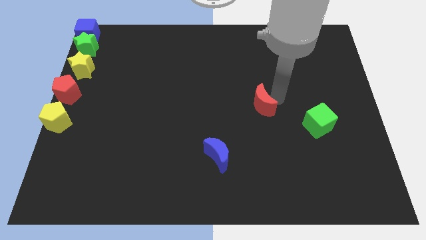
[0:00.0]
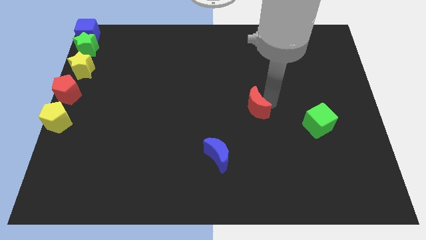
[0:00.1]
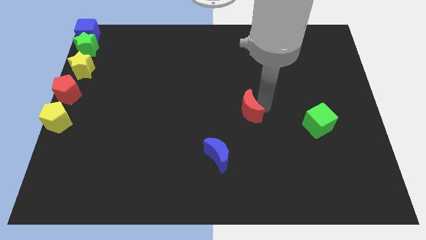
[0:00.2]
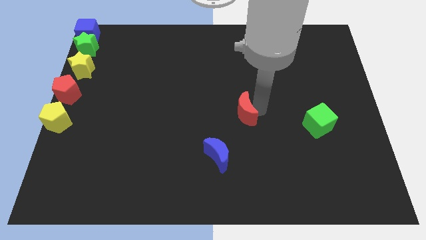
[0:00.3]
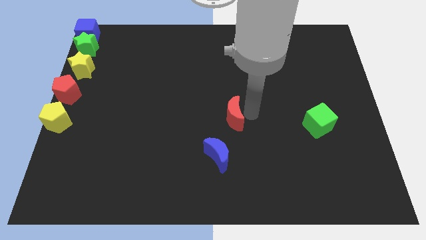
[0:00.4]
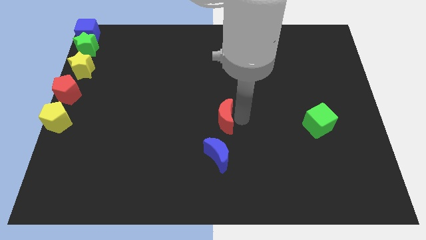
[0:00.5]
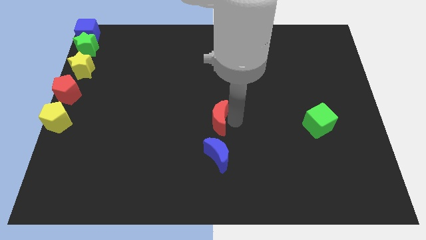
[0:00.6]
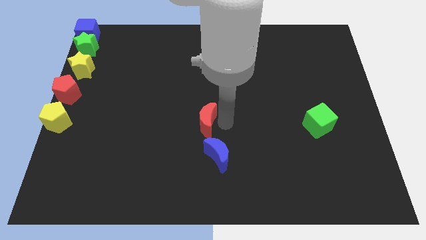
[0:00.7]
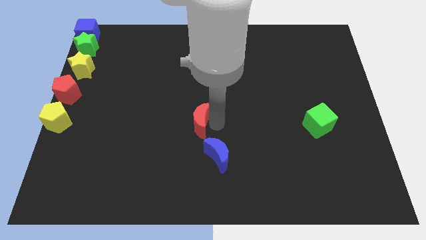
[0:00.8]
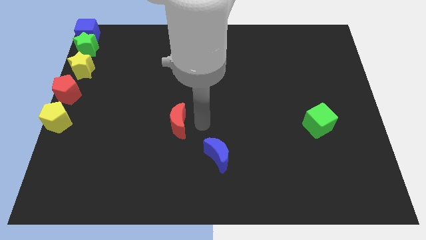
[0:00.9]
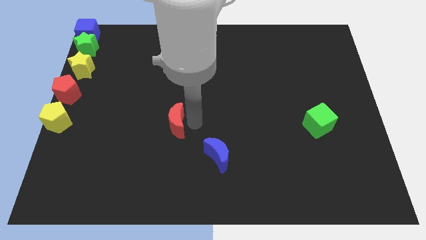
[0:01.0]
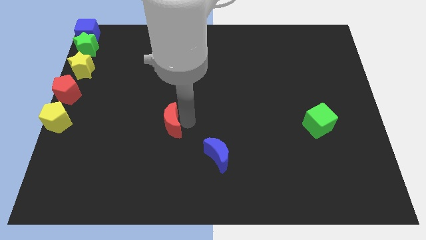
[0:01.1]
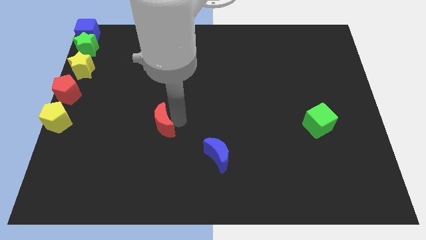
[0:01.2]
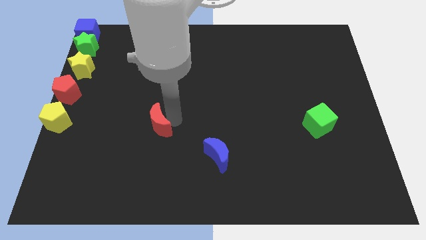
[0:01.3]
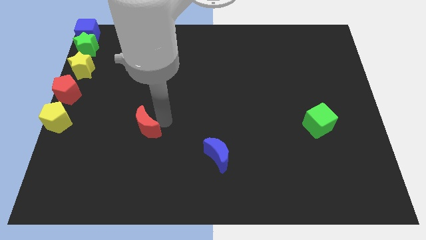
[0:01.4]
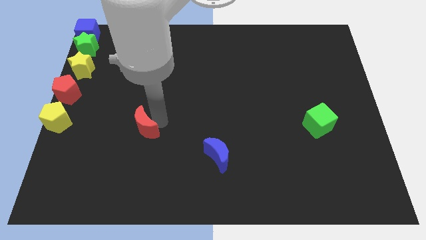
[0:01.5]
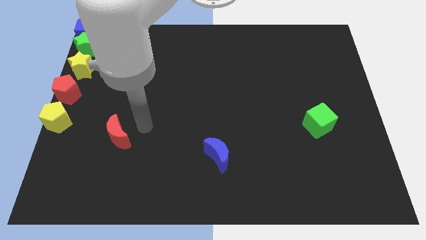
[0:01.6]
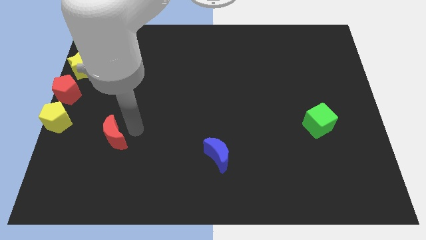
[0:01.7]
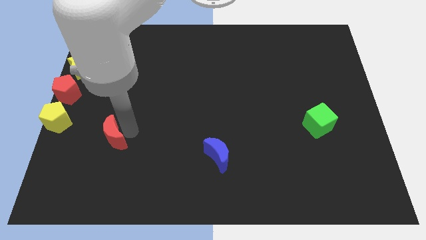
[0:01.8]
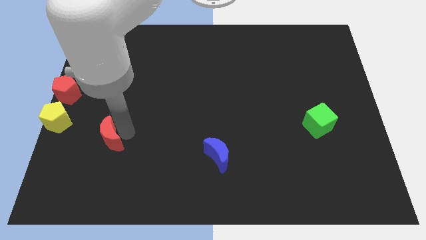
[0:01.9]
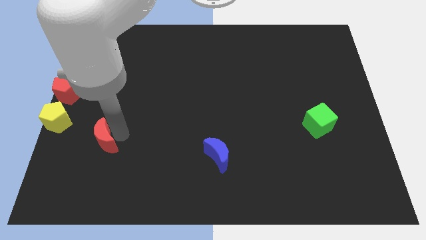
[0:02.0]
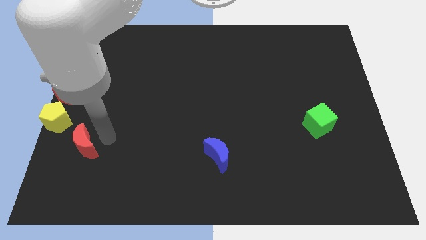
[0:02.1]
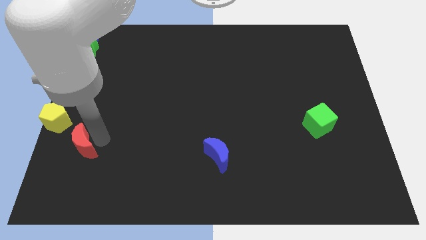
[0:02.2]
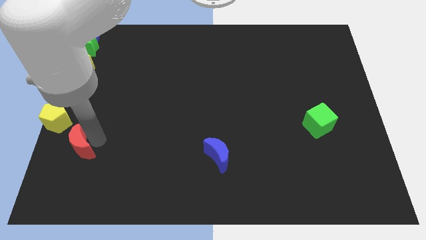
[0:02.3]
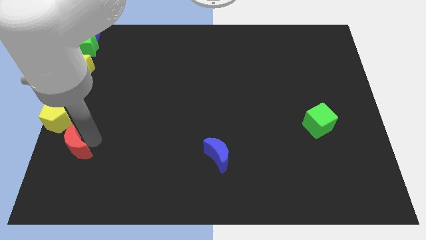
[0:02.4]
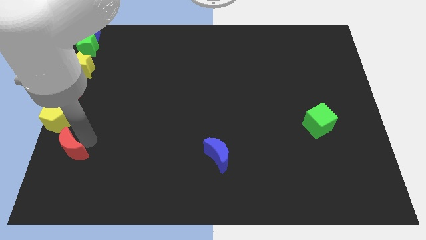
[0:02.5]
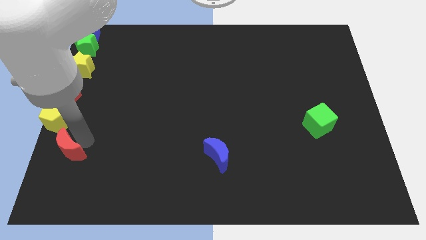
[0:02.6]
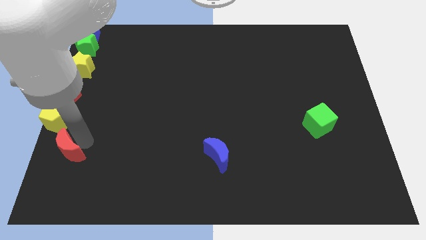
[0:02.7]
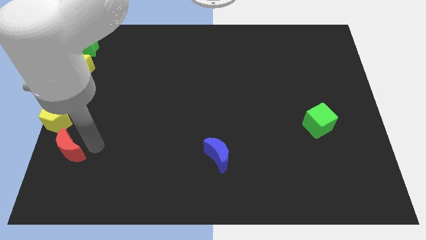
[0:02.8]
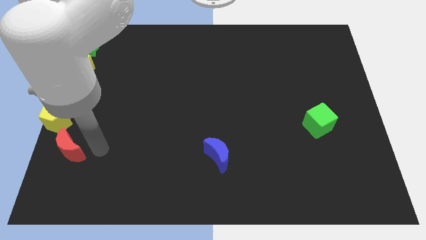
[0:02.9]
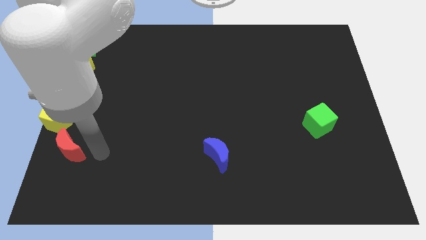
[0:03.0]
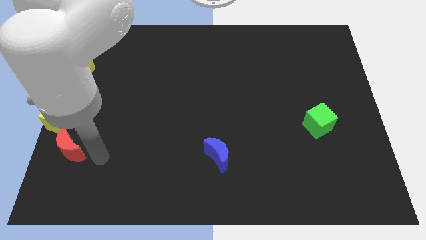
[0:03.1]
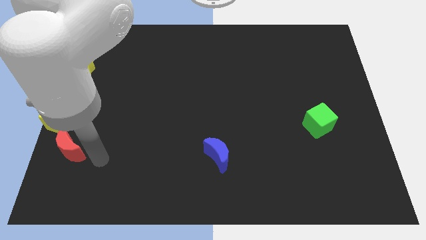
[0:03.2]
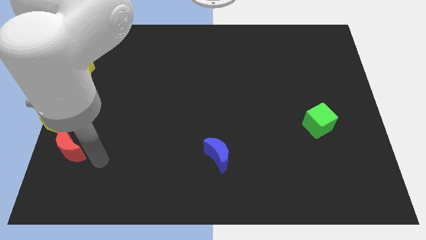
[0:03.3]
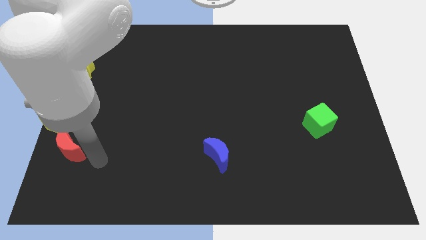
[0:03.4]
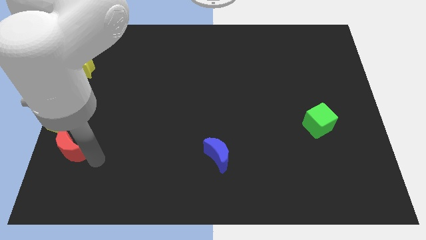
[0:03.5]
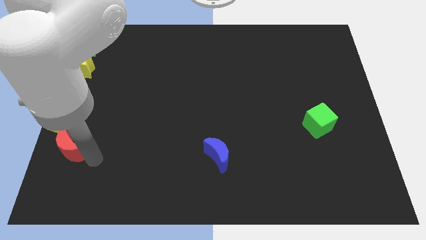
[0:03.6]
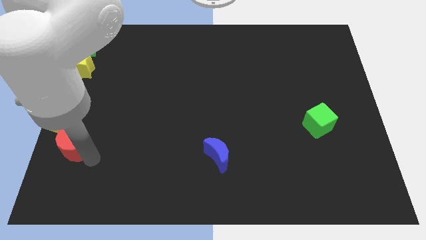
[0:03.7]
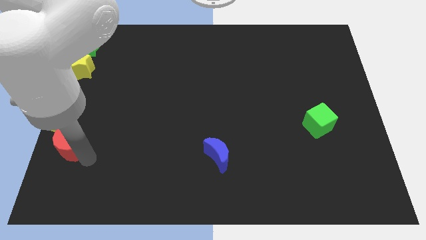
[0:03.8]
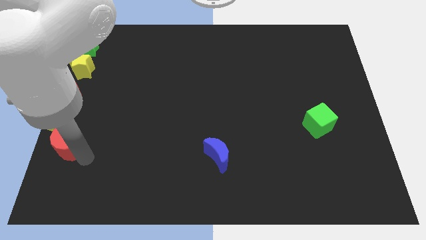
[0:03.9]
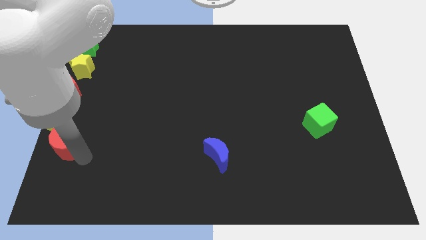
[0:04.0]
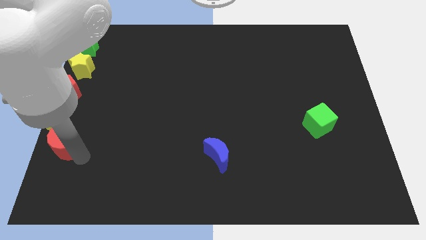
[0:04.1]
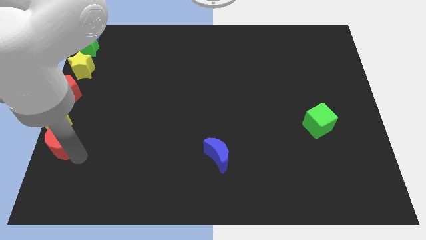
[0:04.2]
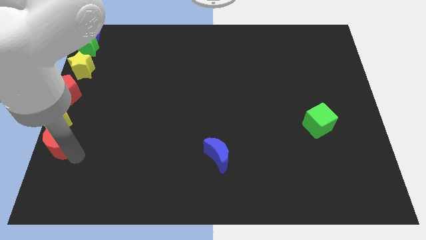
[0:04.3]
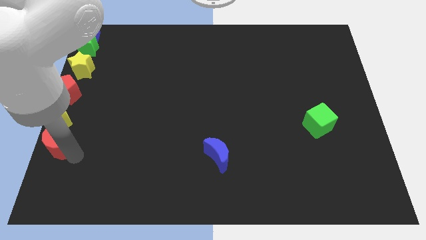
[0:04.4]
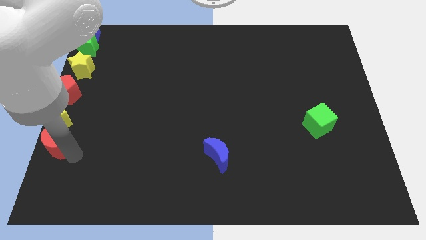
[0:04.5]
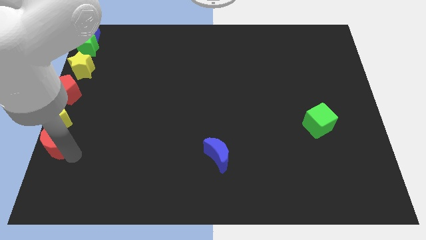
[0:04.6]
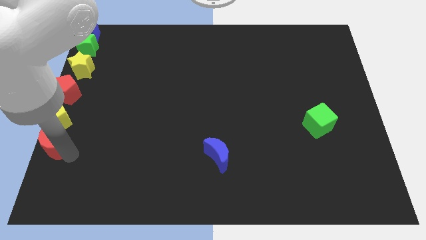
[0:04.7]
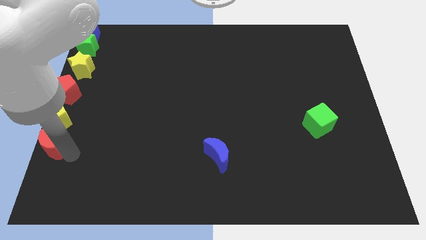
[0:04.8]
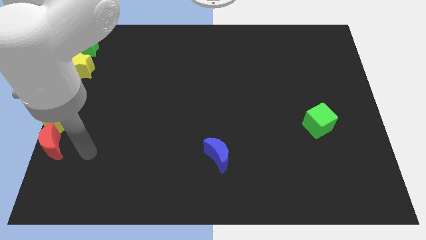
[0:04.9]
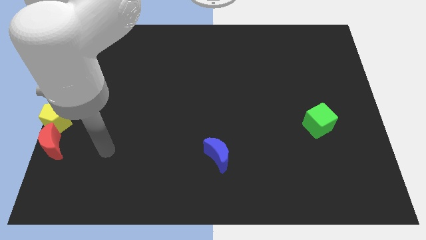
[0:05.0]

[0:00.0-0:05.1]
place the red moon below yellow pentagon

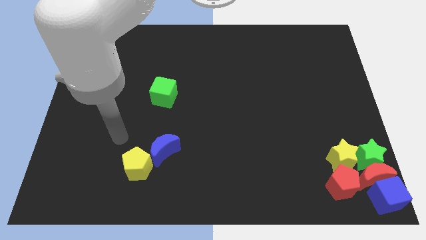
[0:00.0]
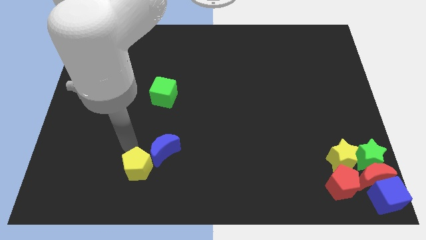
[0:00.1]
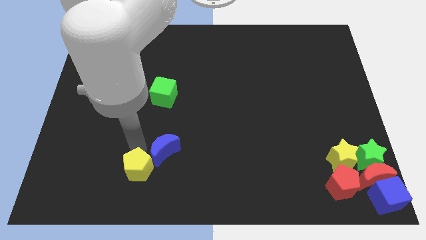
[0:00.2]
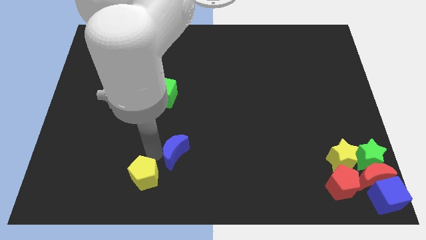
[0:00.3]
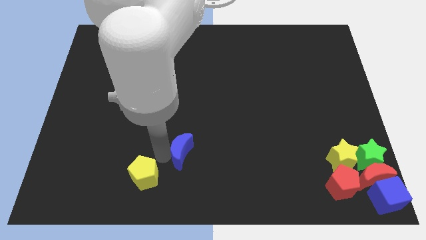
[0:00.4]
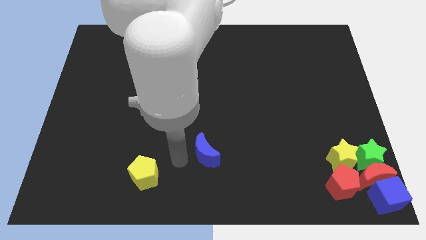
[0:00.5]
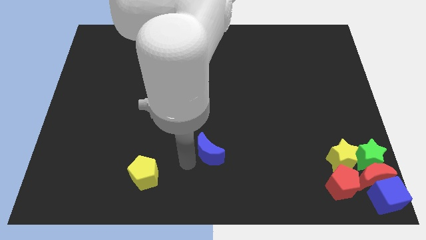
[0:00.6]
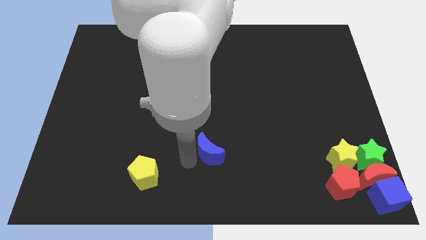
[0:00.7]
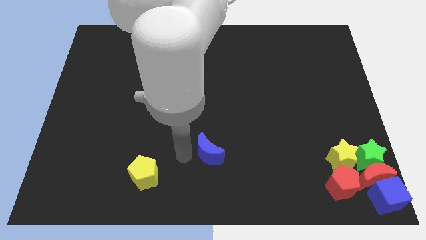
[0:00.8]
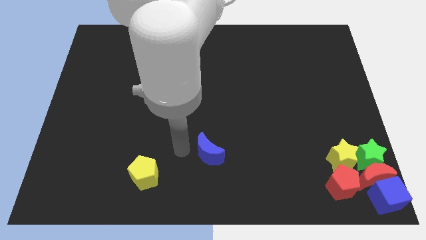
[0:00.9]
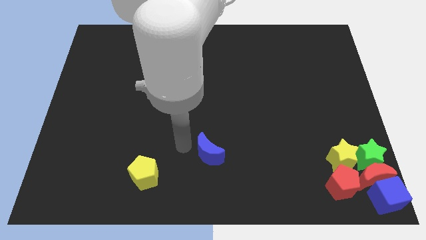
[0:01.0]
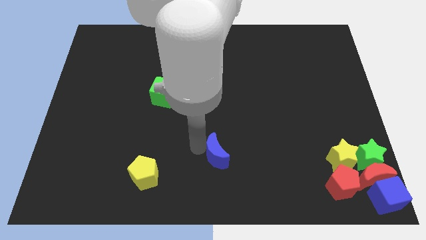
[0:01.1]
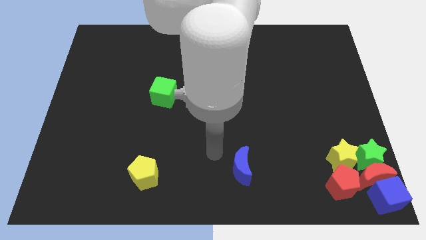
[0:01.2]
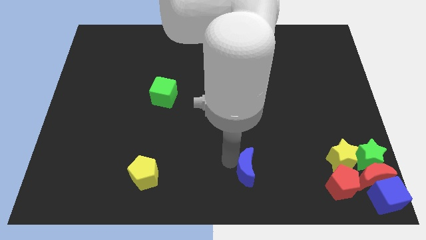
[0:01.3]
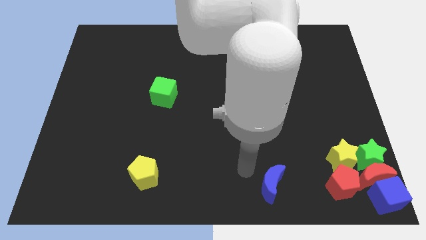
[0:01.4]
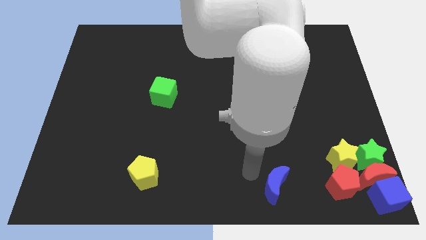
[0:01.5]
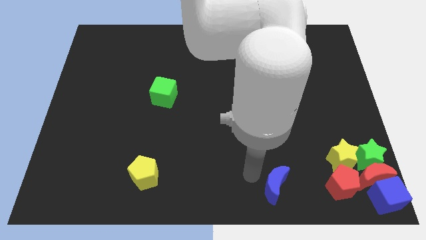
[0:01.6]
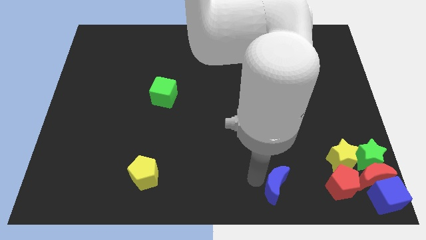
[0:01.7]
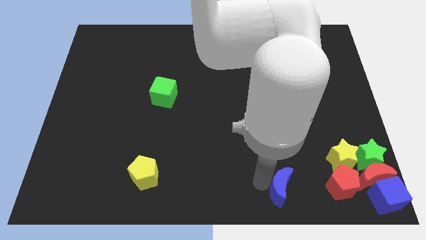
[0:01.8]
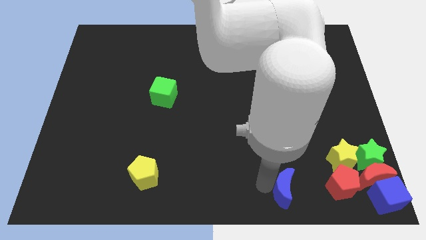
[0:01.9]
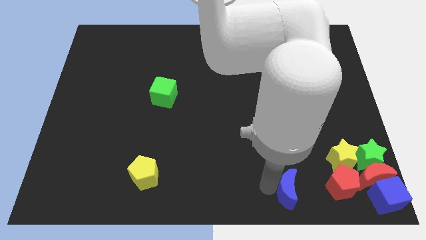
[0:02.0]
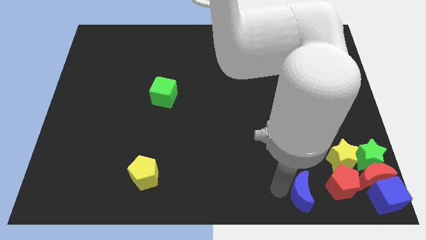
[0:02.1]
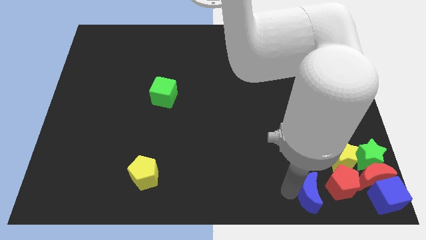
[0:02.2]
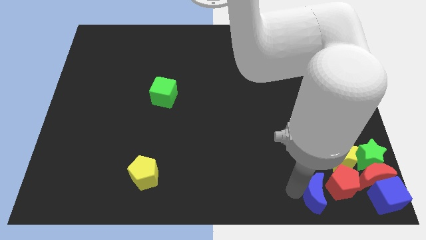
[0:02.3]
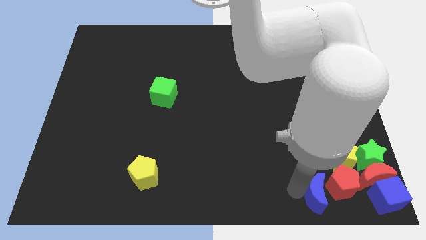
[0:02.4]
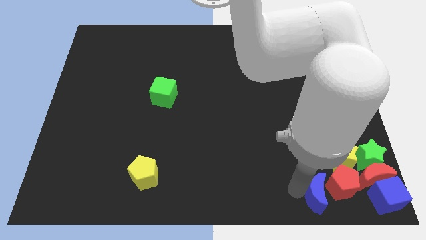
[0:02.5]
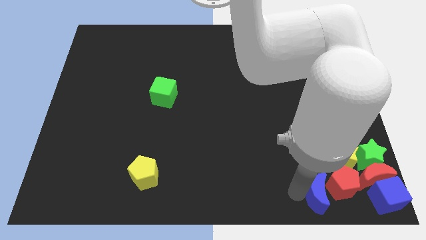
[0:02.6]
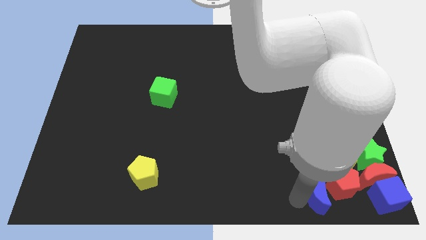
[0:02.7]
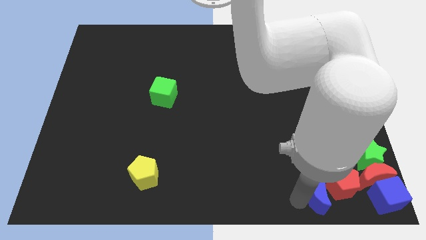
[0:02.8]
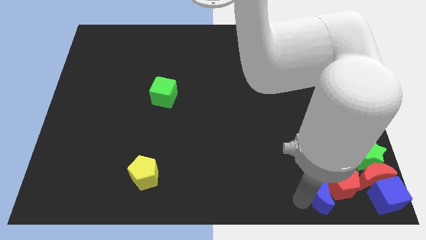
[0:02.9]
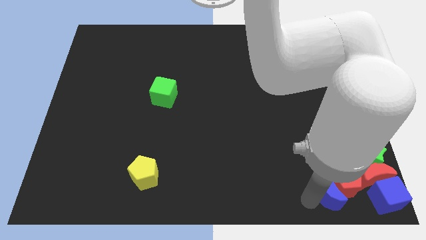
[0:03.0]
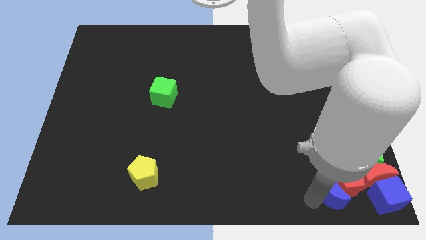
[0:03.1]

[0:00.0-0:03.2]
place the blue moon to the left side of the red pentagon

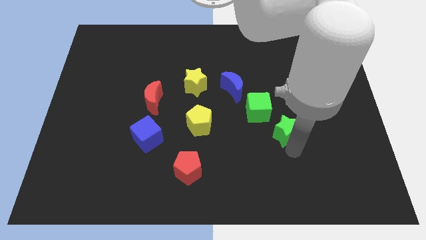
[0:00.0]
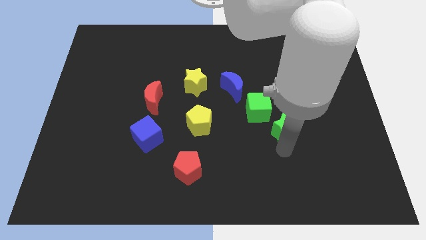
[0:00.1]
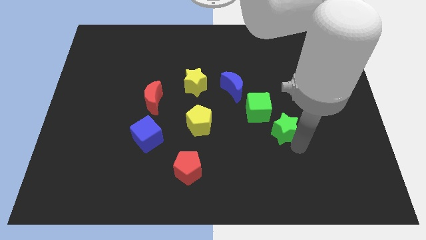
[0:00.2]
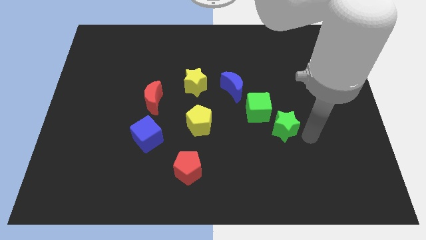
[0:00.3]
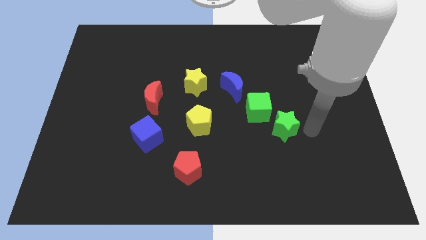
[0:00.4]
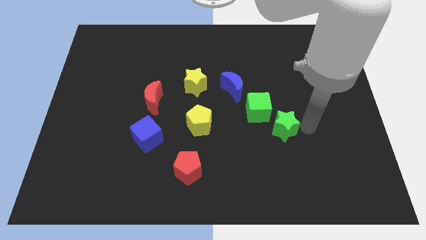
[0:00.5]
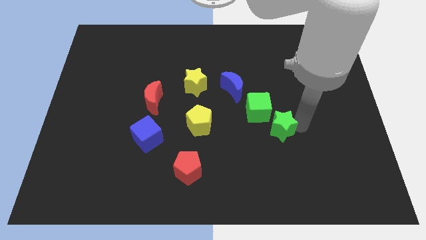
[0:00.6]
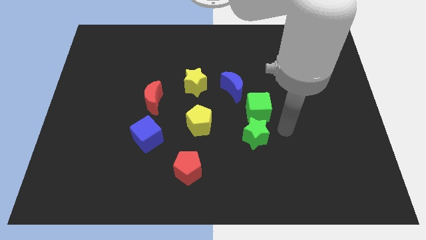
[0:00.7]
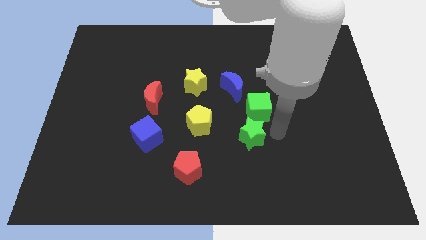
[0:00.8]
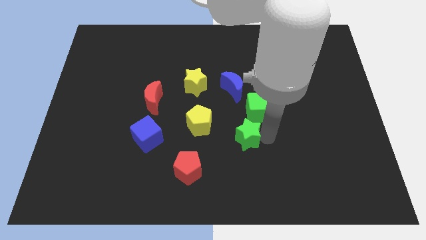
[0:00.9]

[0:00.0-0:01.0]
place the green star beside the green cube
